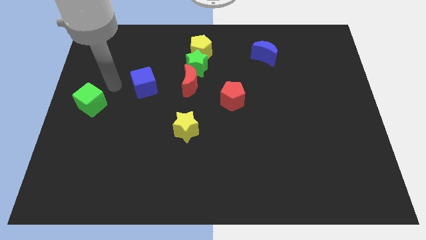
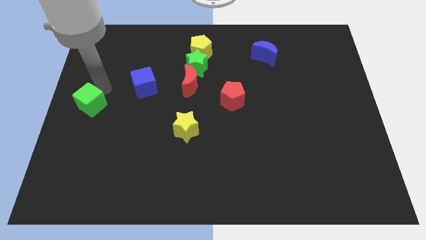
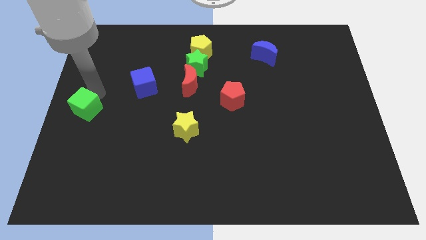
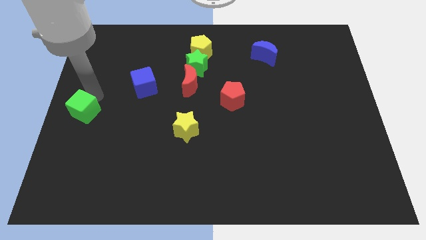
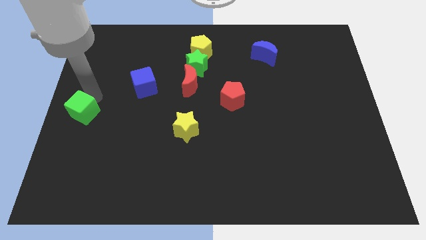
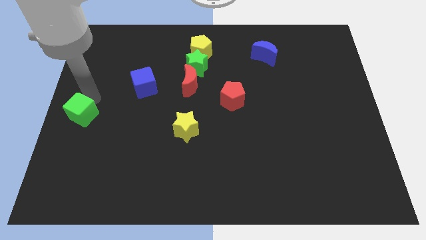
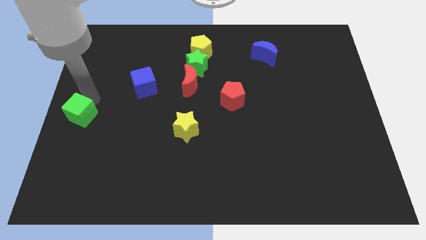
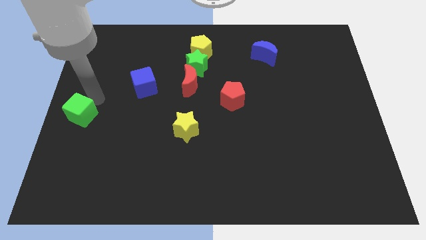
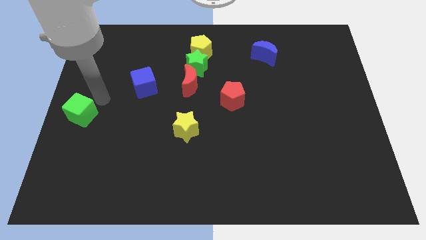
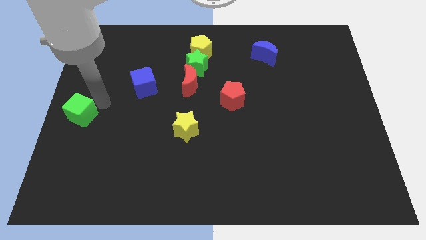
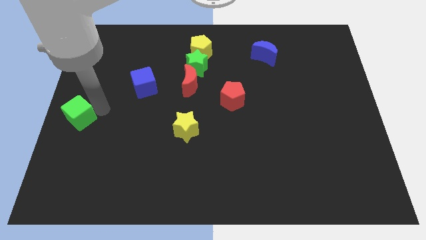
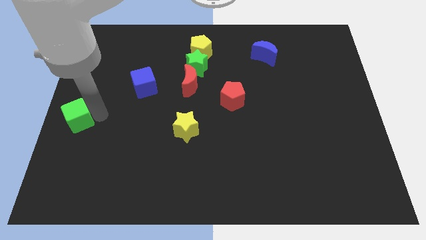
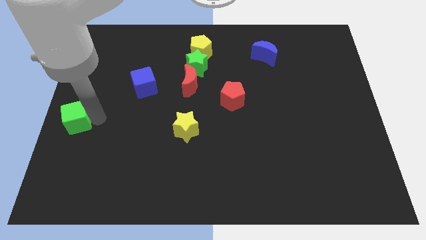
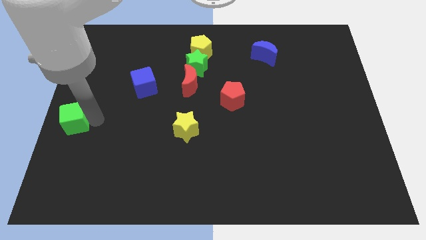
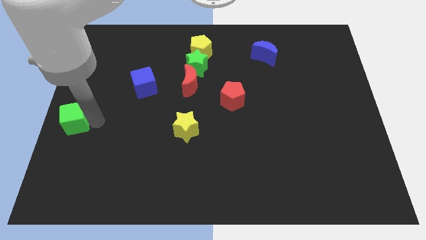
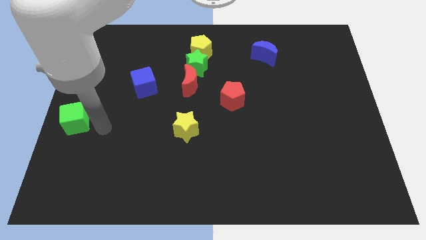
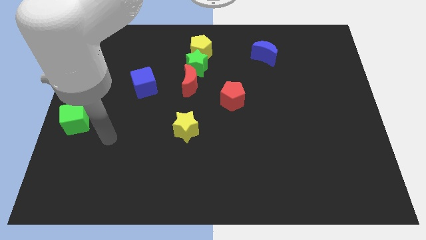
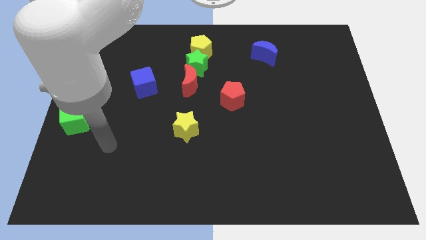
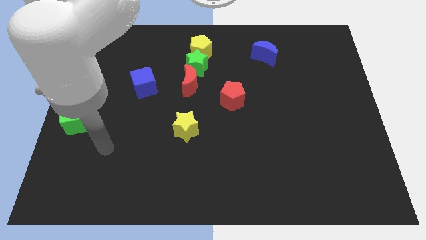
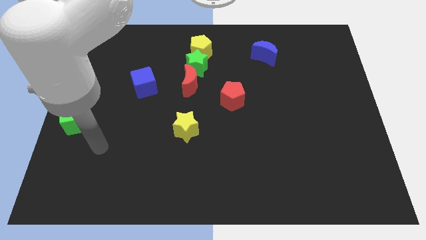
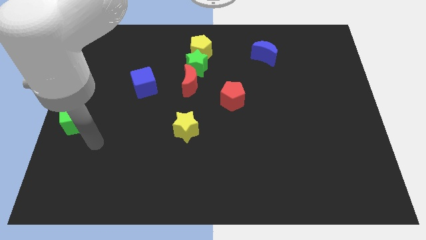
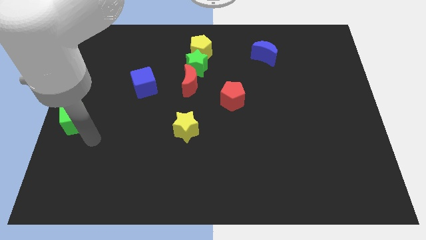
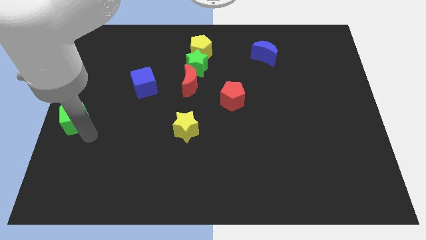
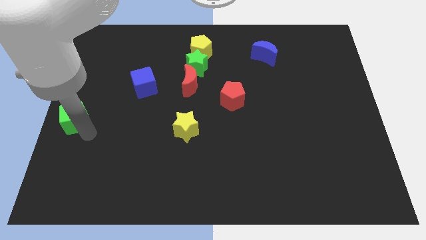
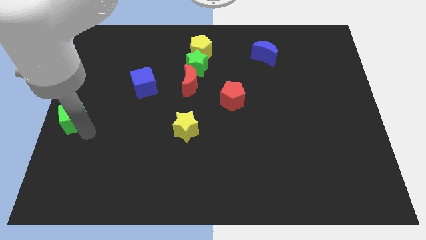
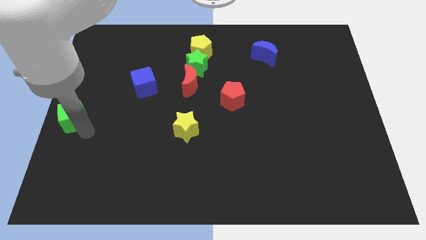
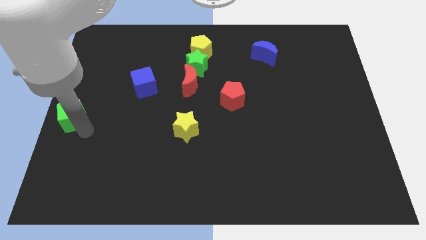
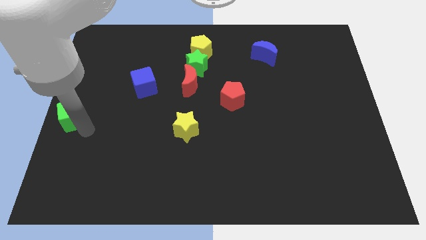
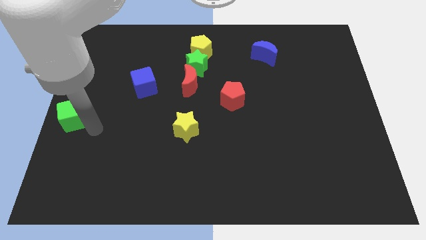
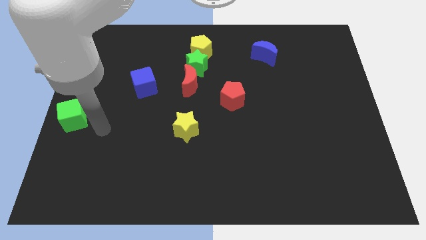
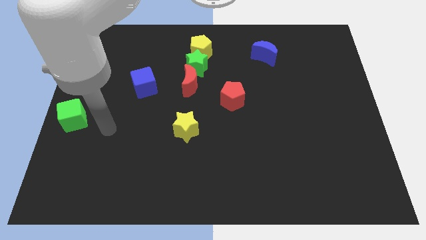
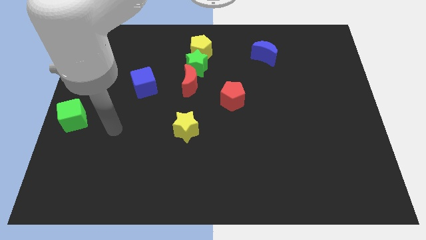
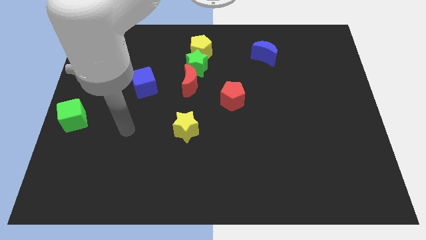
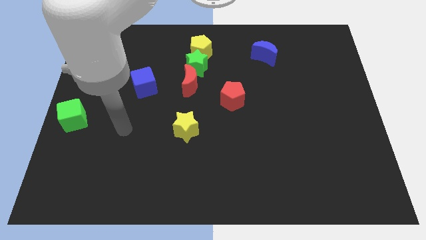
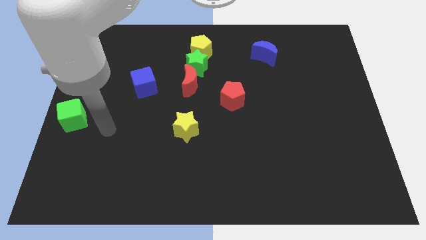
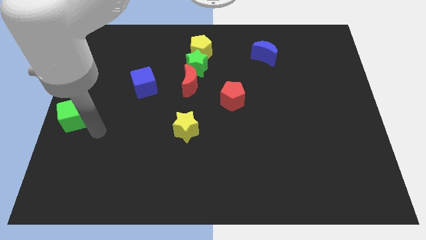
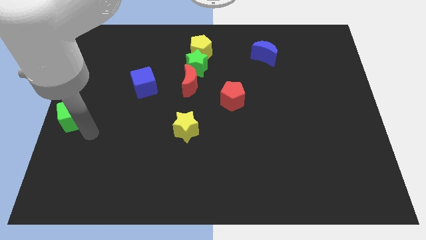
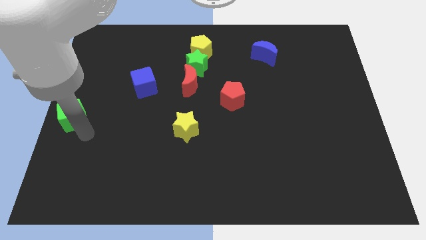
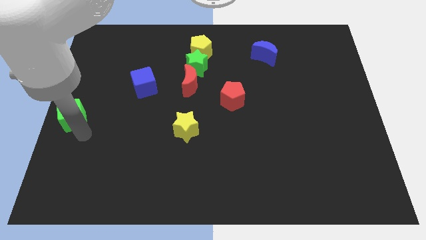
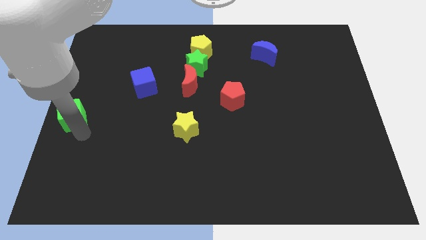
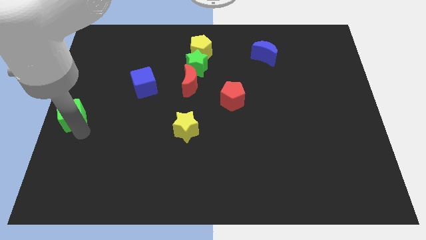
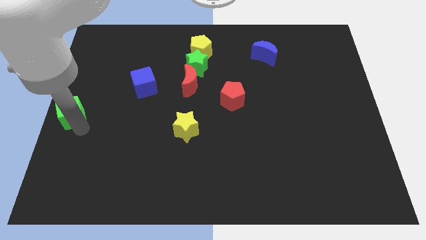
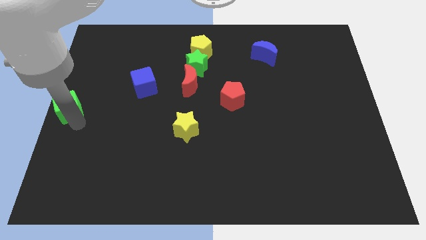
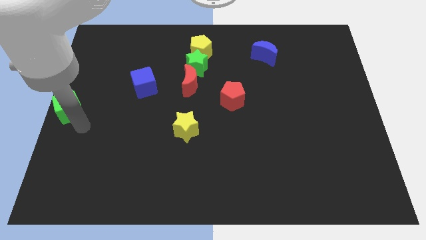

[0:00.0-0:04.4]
push green cube to the center left side of the board

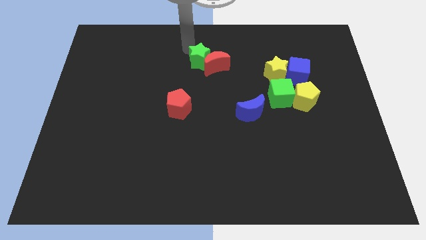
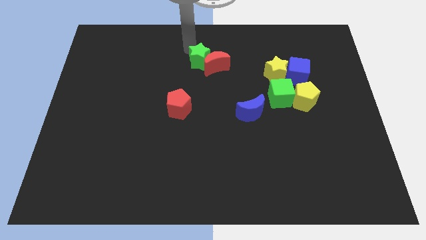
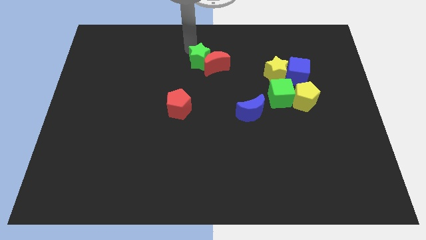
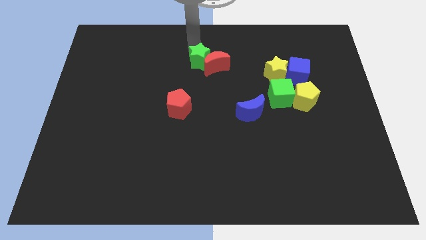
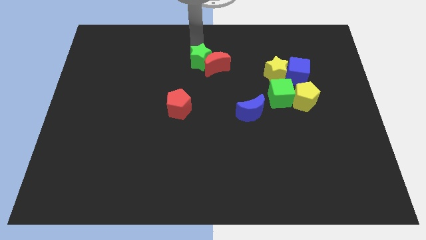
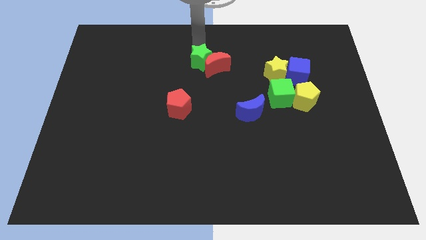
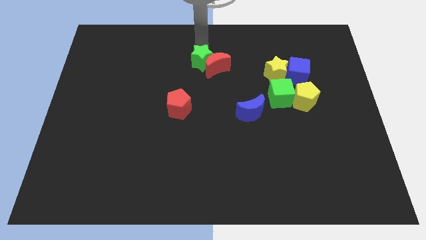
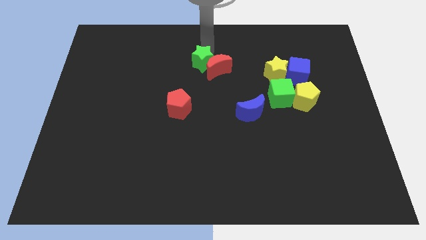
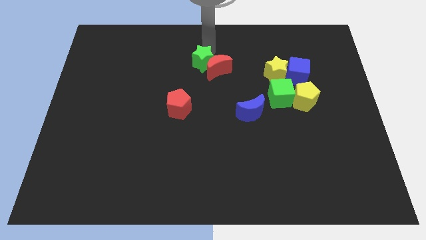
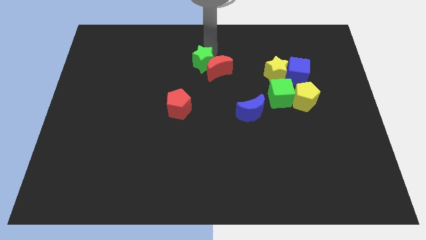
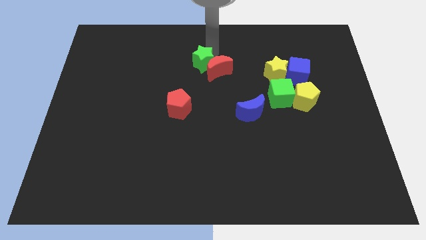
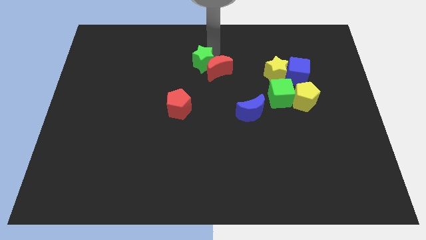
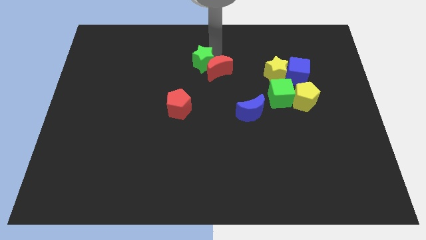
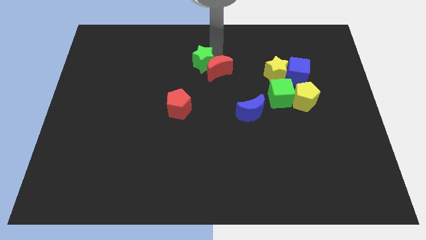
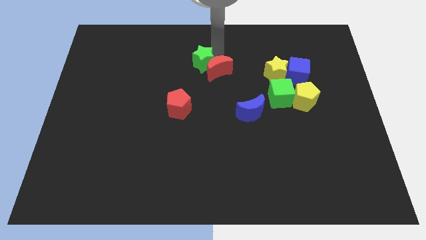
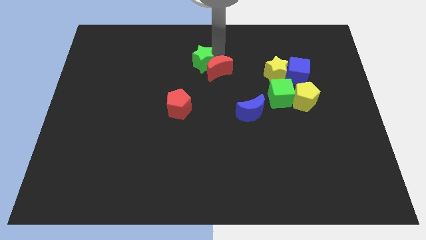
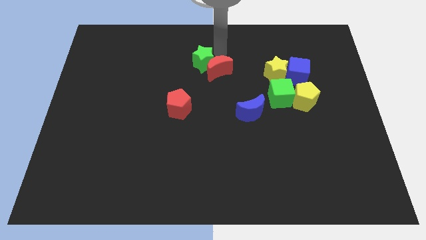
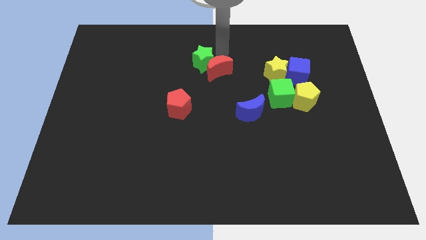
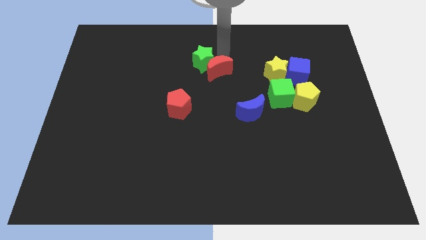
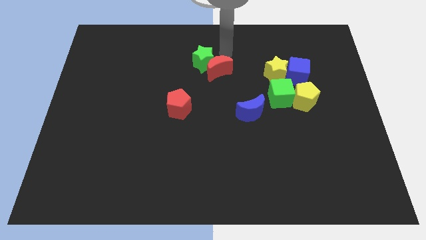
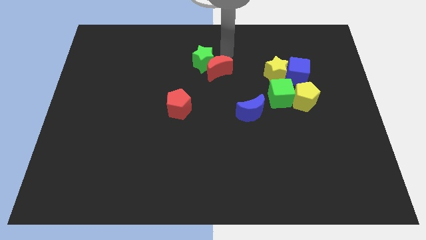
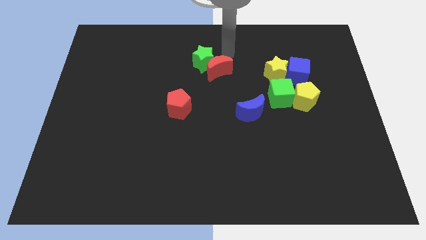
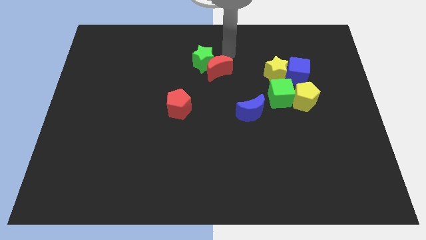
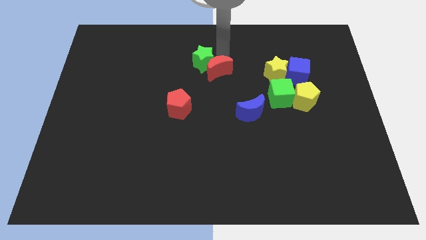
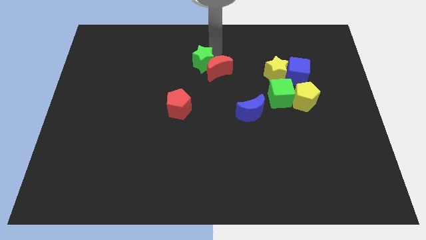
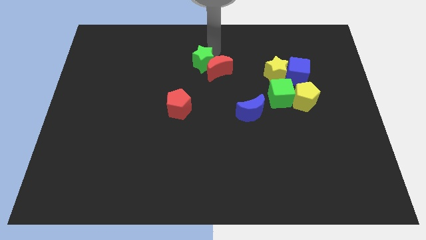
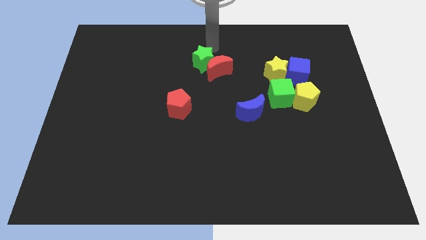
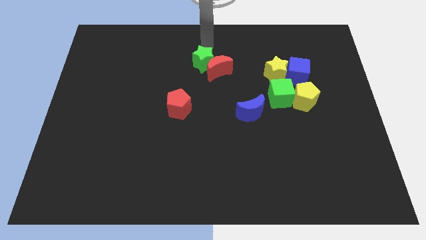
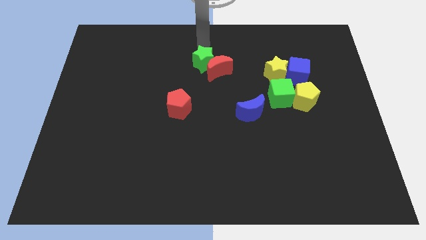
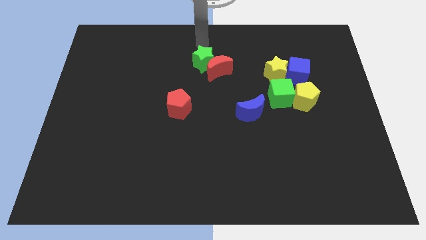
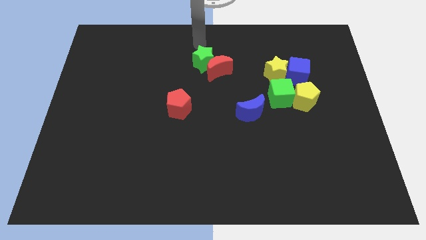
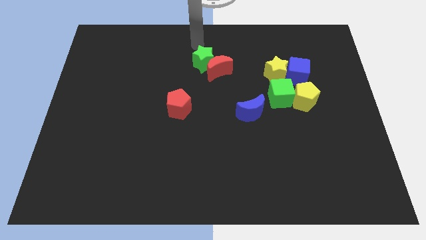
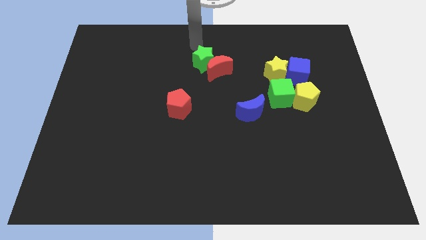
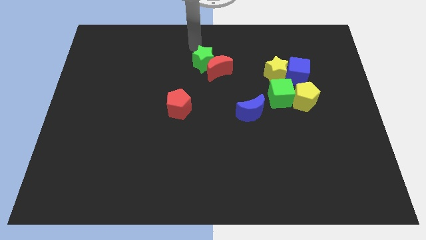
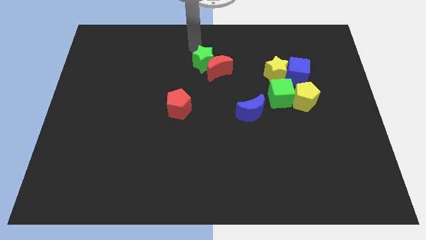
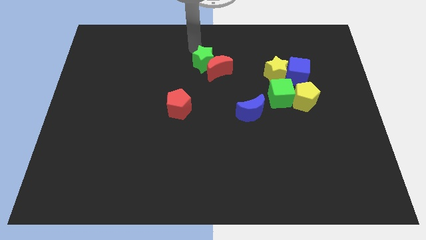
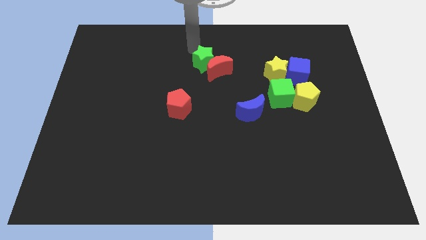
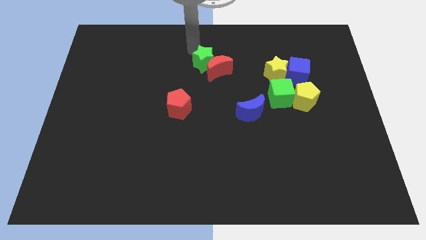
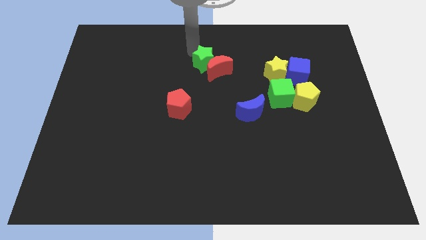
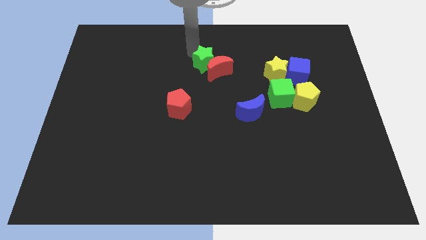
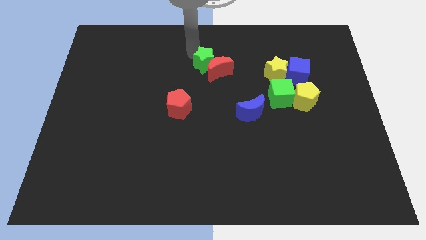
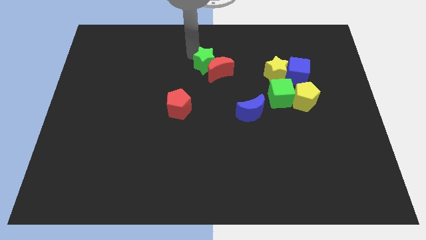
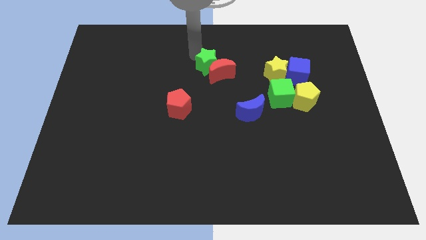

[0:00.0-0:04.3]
push green start in to red pentagon

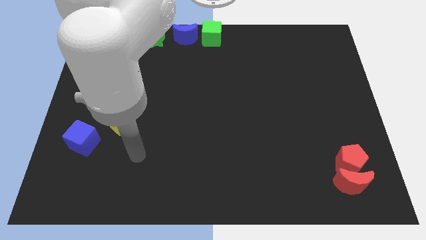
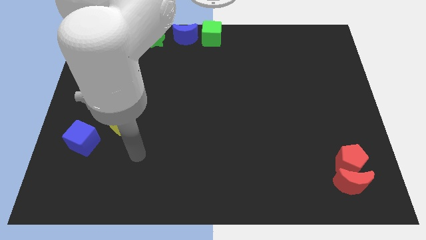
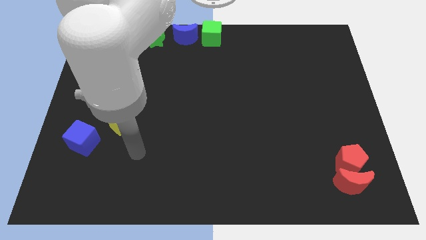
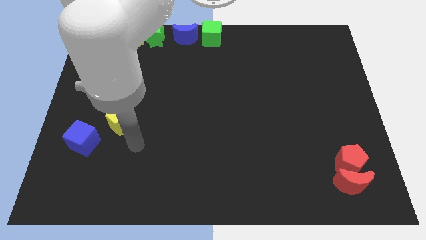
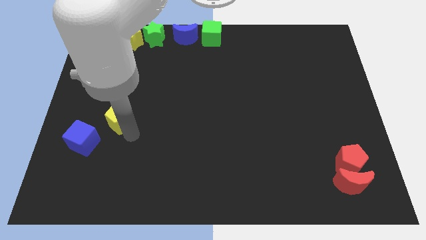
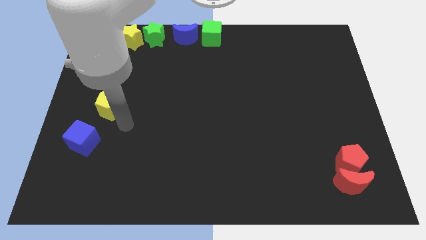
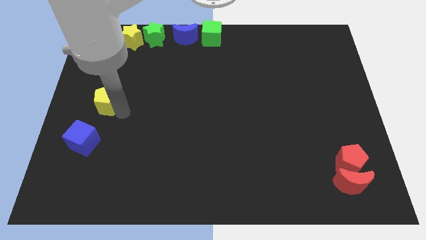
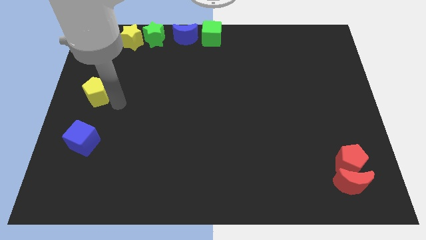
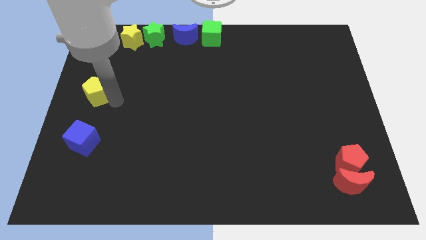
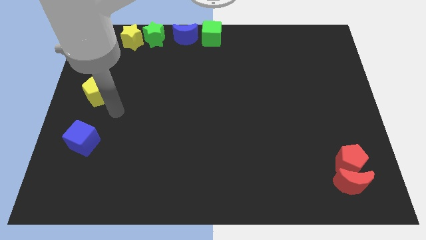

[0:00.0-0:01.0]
place the yellow pentagon above the blue cube
